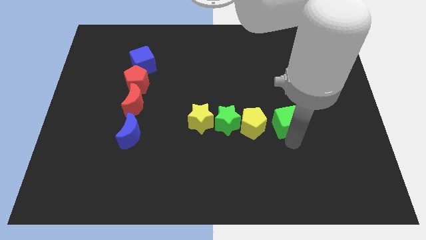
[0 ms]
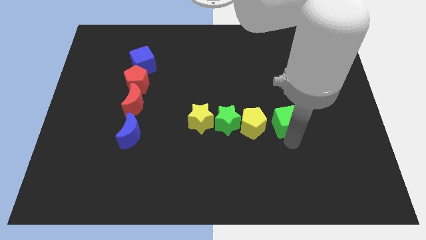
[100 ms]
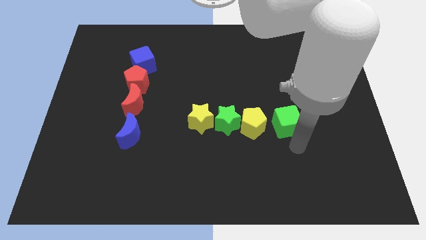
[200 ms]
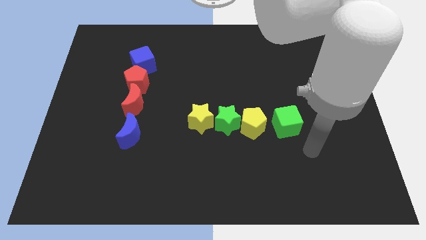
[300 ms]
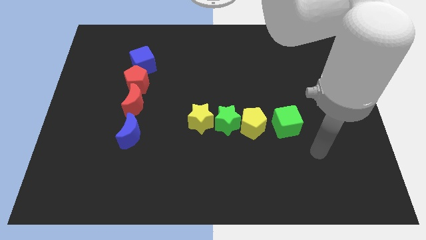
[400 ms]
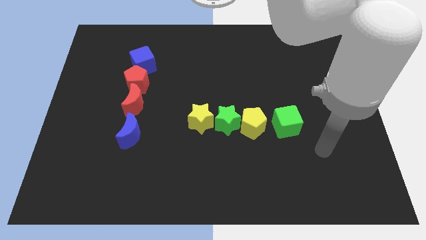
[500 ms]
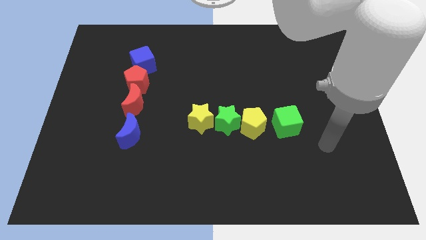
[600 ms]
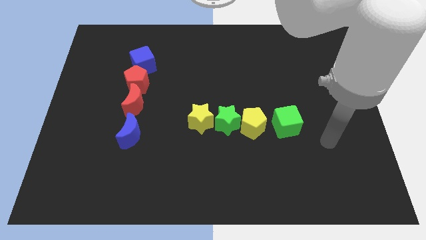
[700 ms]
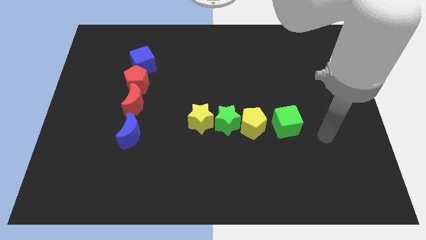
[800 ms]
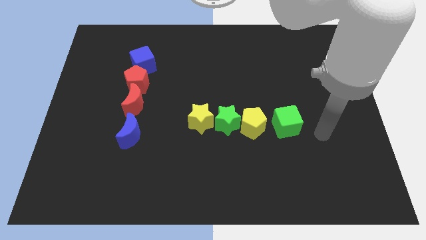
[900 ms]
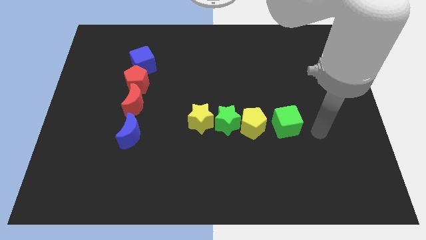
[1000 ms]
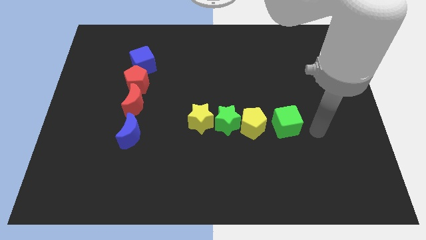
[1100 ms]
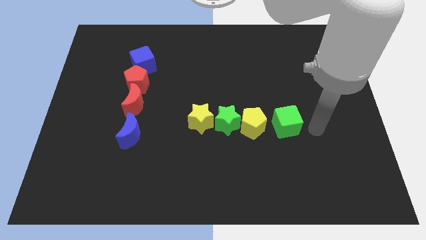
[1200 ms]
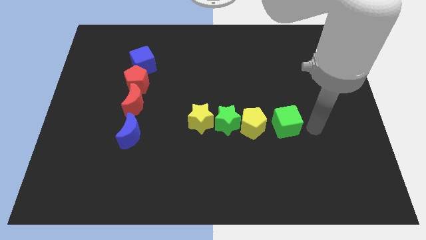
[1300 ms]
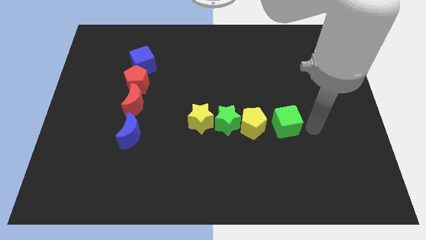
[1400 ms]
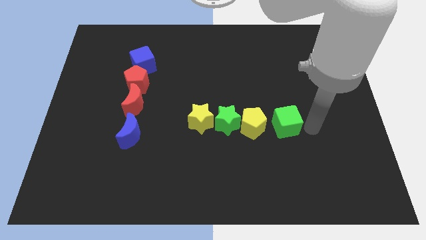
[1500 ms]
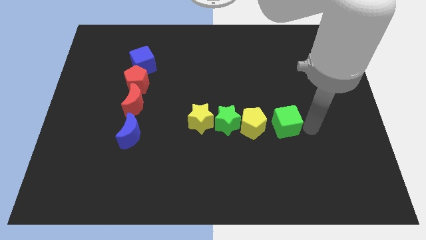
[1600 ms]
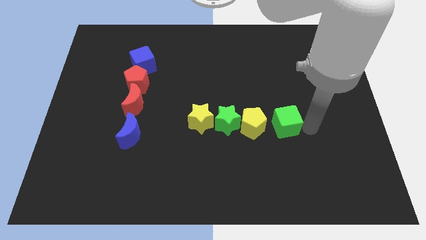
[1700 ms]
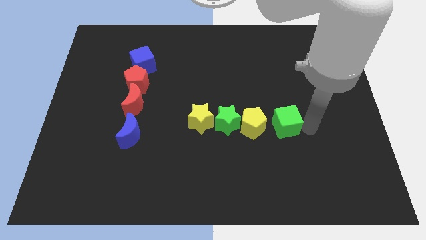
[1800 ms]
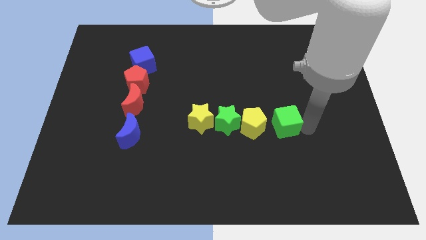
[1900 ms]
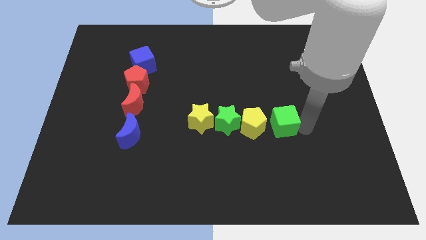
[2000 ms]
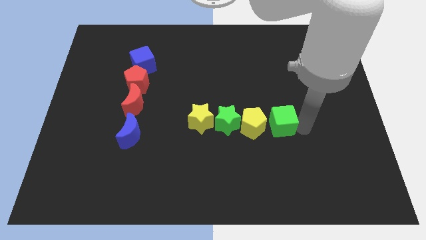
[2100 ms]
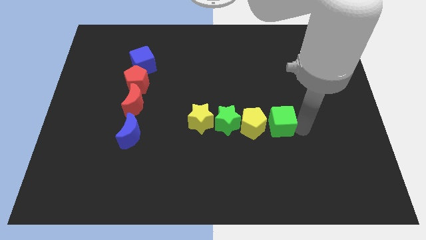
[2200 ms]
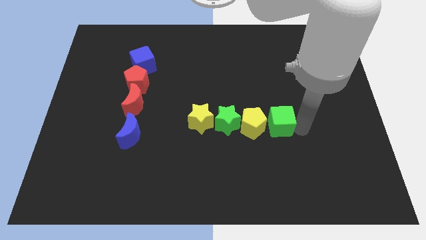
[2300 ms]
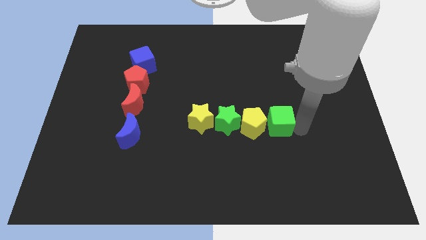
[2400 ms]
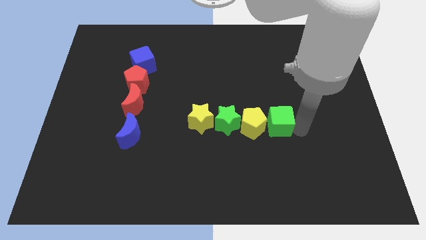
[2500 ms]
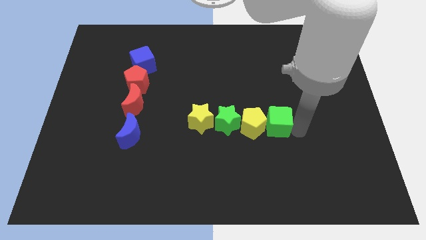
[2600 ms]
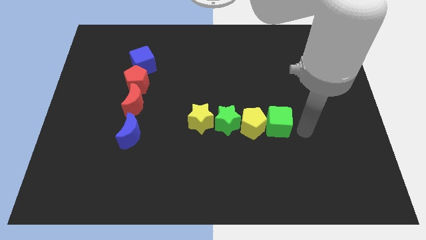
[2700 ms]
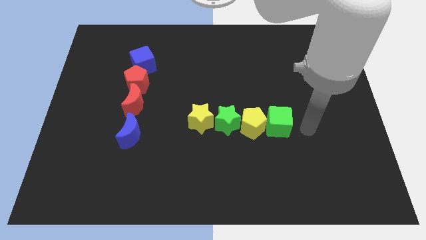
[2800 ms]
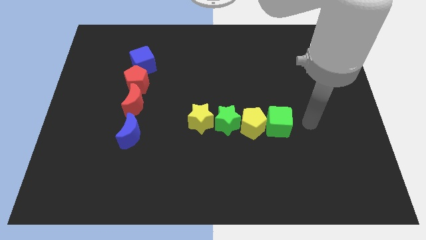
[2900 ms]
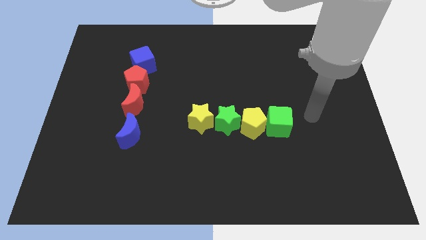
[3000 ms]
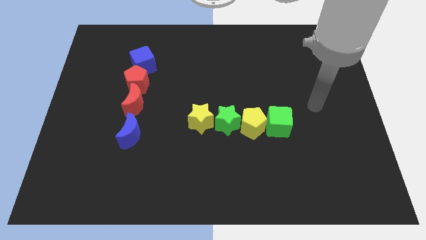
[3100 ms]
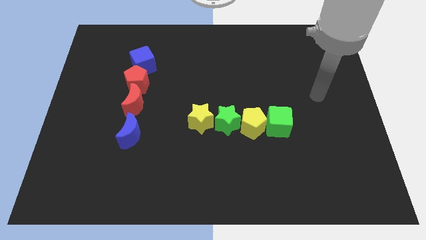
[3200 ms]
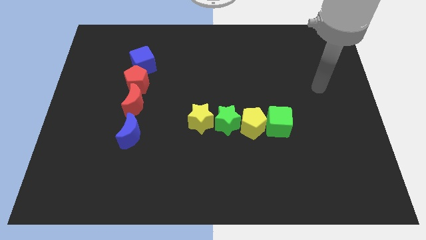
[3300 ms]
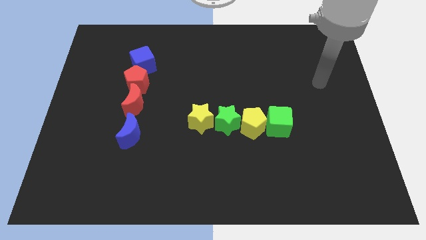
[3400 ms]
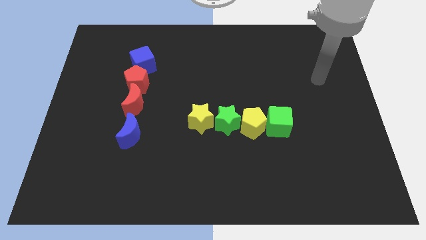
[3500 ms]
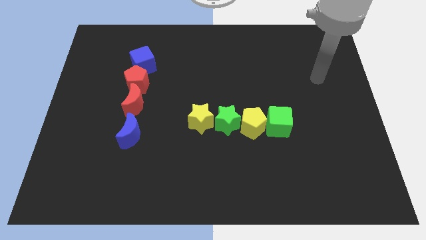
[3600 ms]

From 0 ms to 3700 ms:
push the green cube to form a horizontal line with yellow blocks and the green star

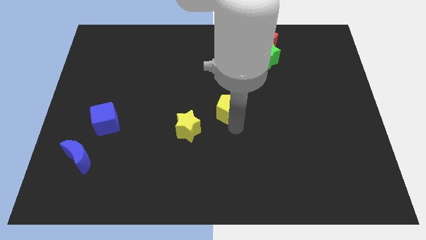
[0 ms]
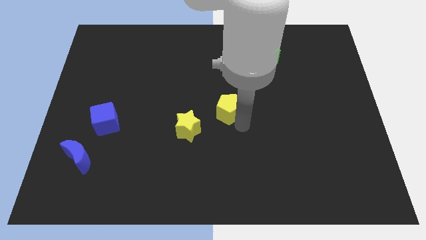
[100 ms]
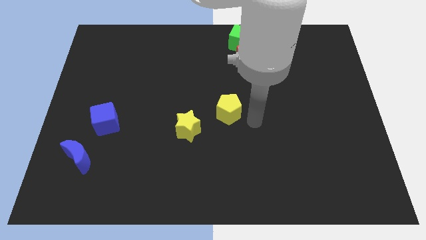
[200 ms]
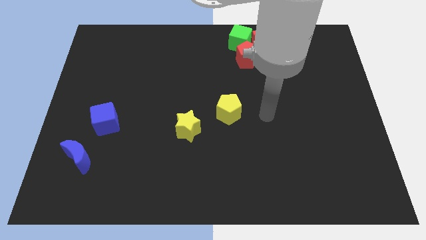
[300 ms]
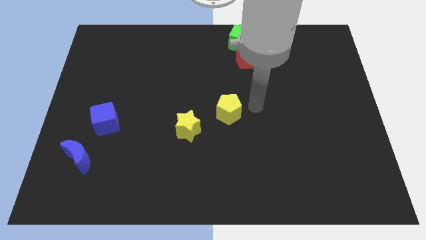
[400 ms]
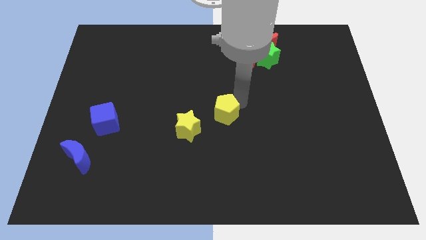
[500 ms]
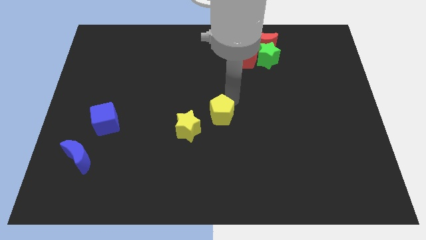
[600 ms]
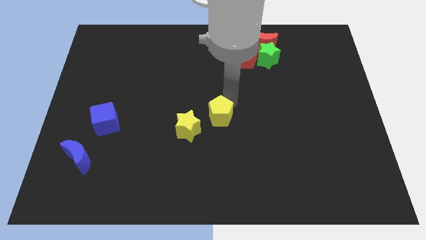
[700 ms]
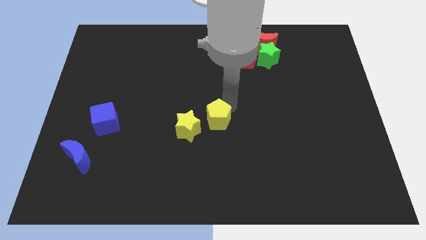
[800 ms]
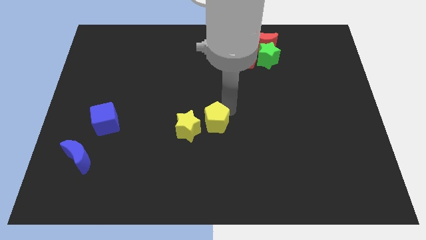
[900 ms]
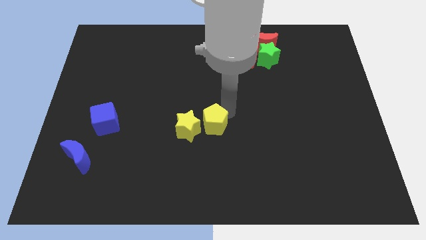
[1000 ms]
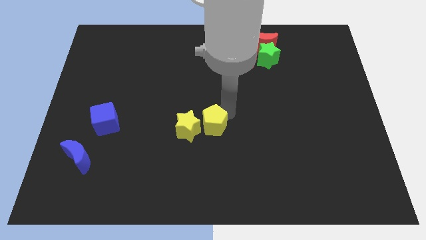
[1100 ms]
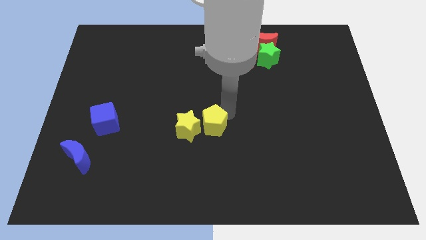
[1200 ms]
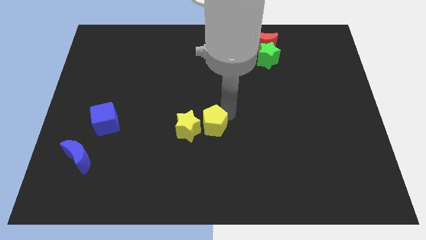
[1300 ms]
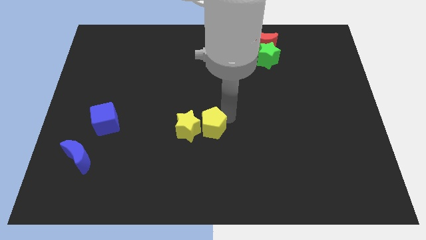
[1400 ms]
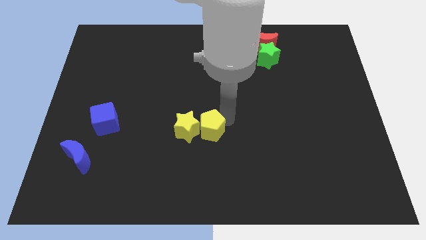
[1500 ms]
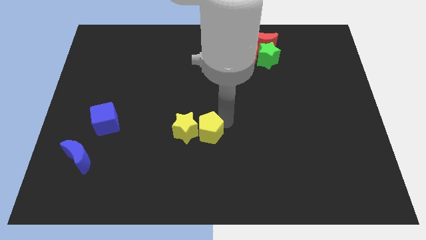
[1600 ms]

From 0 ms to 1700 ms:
move yellow pentagon into the yellow star to the center of the board

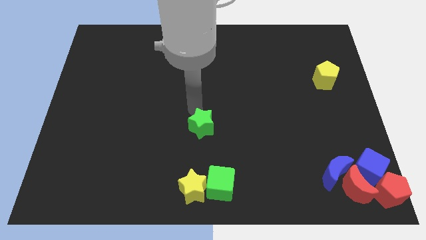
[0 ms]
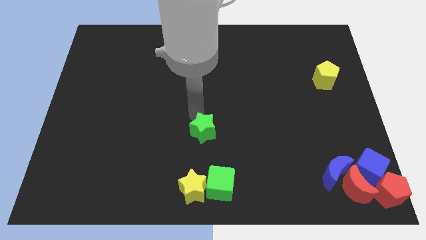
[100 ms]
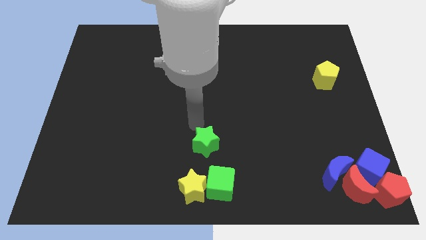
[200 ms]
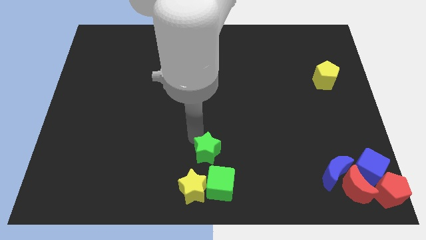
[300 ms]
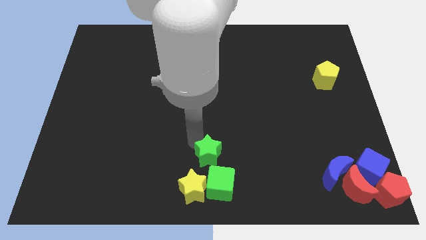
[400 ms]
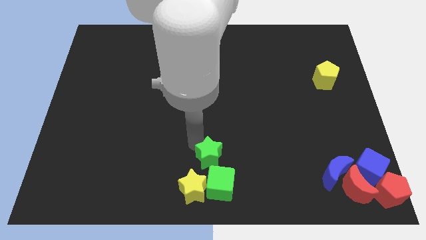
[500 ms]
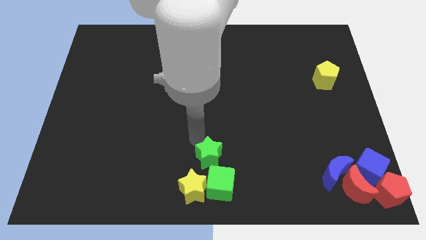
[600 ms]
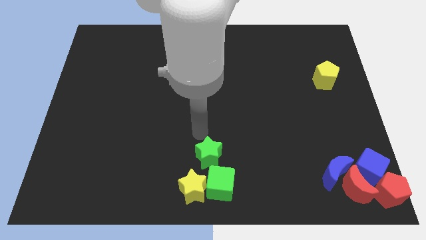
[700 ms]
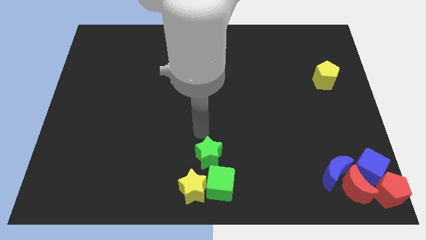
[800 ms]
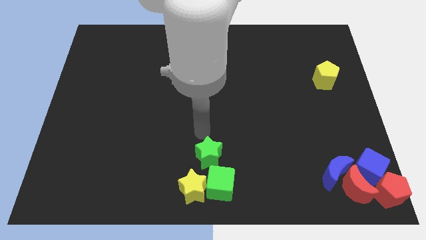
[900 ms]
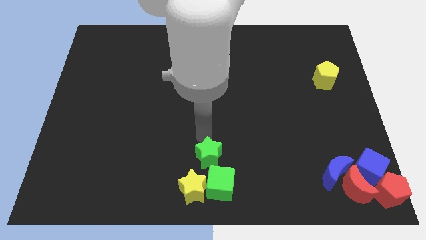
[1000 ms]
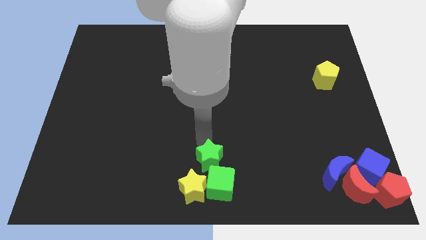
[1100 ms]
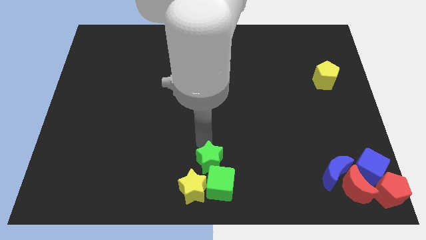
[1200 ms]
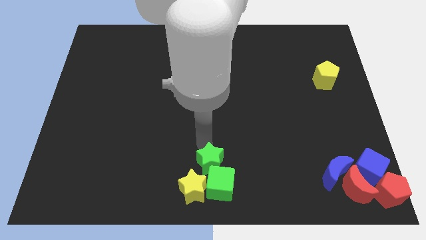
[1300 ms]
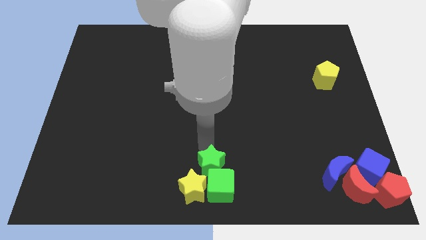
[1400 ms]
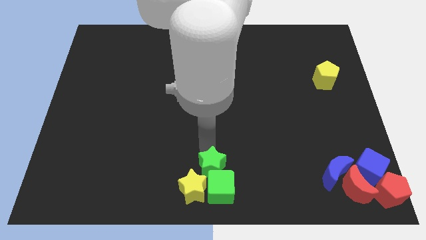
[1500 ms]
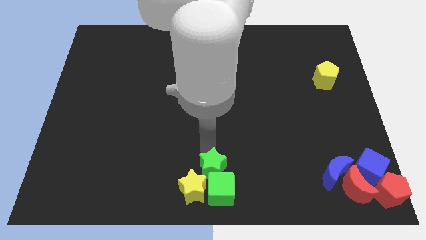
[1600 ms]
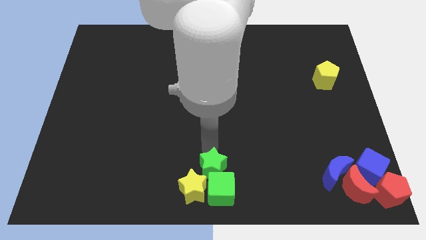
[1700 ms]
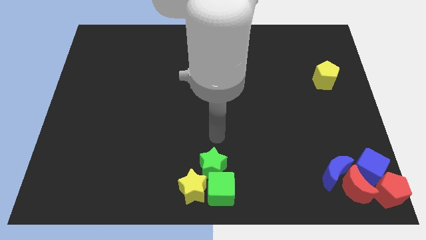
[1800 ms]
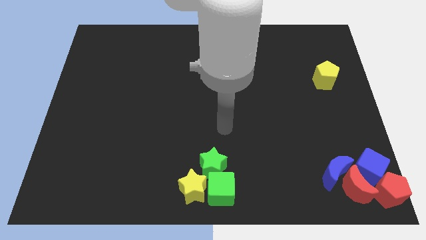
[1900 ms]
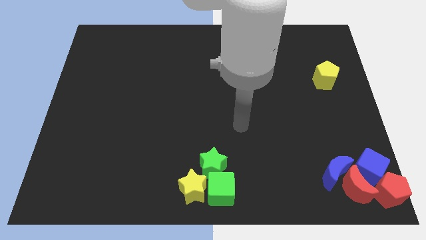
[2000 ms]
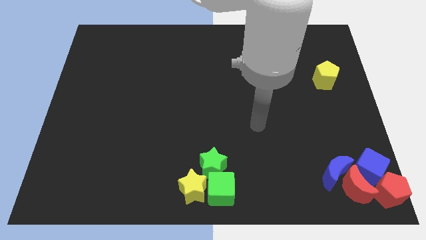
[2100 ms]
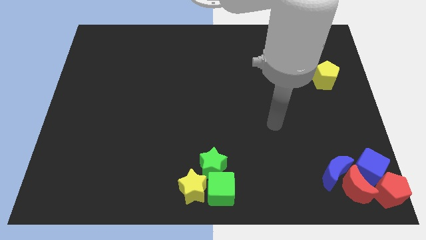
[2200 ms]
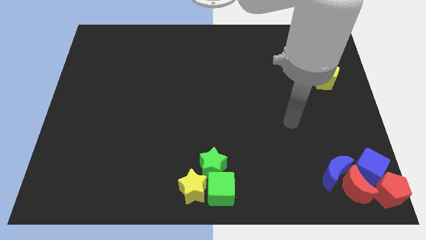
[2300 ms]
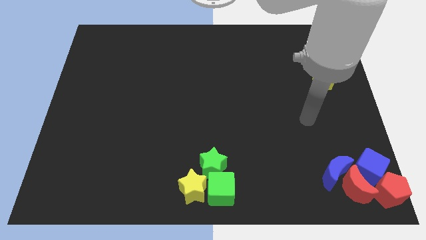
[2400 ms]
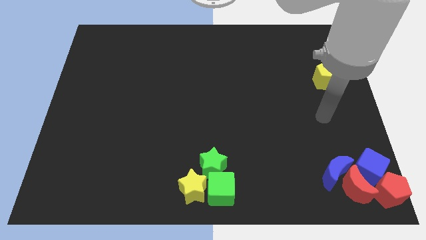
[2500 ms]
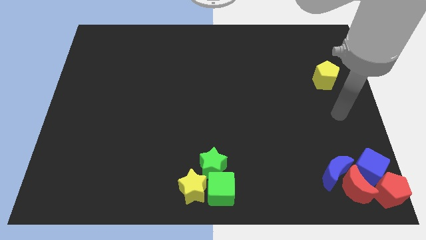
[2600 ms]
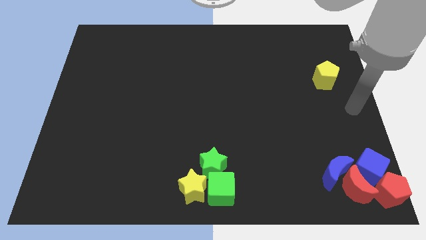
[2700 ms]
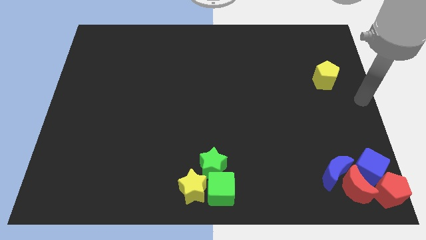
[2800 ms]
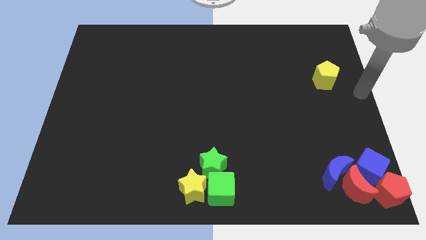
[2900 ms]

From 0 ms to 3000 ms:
push the green star into the top side of the green cube

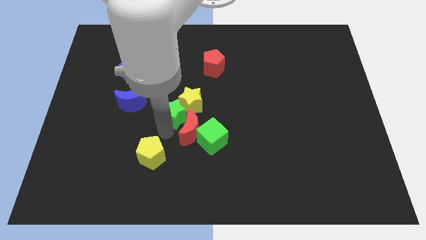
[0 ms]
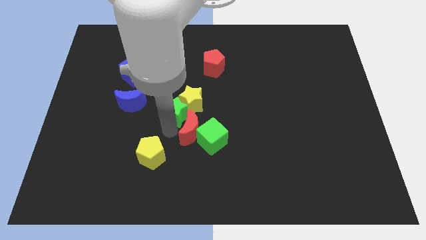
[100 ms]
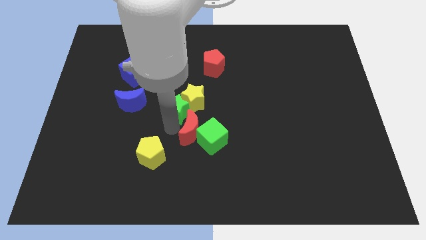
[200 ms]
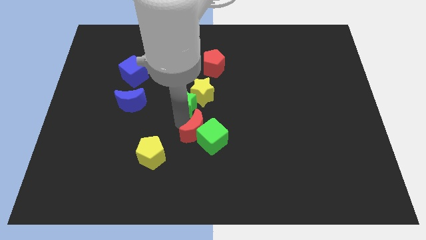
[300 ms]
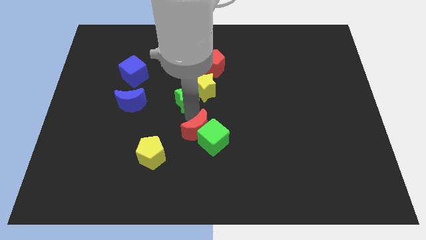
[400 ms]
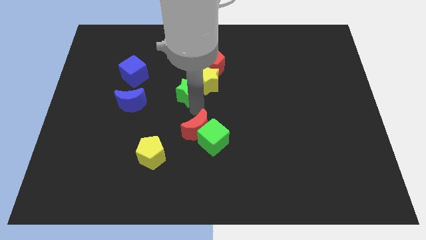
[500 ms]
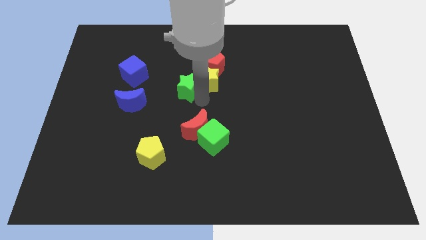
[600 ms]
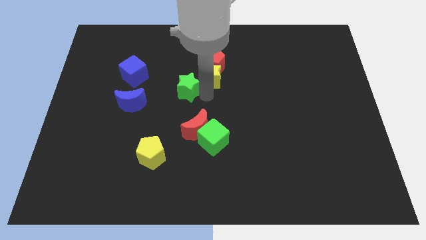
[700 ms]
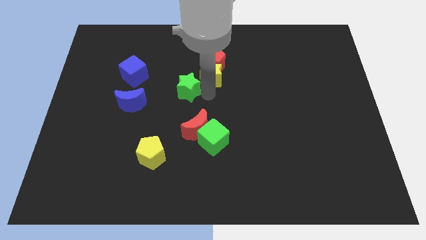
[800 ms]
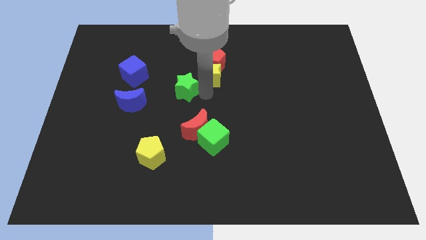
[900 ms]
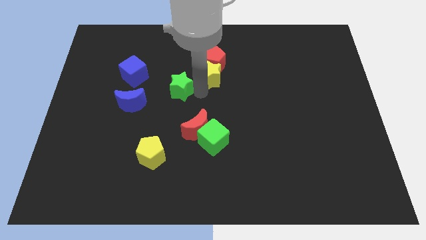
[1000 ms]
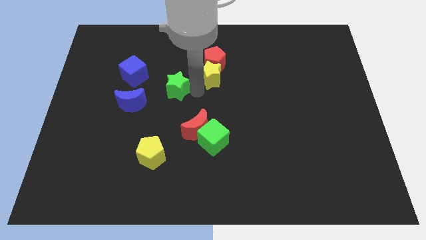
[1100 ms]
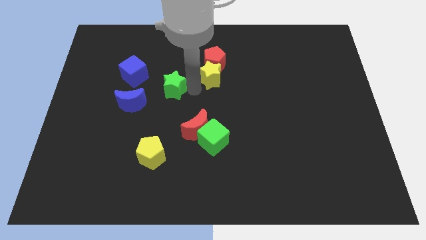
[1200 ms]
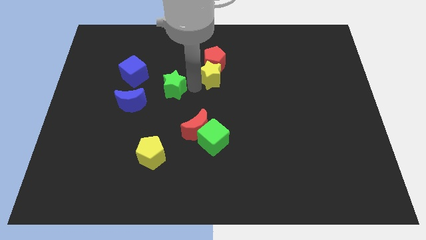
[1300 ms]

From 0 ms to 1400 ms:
separate the yellow star and the green star
